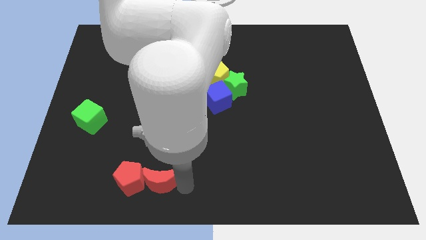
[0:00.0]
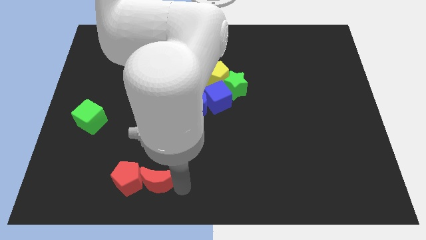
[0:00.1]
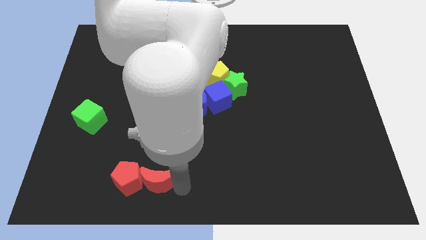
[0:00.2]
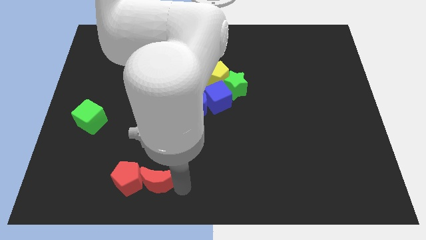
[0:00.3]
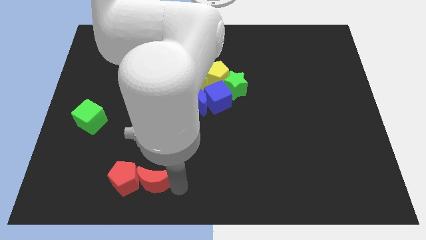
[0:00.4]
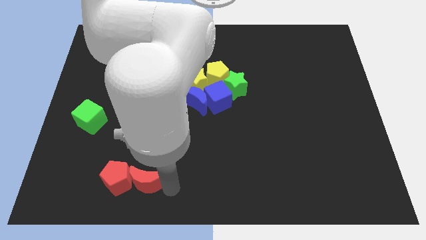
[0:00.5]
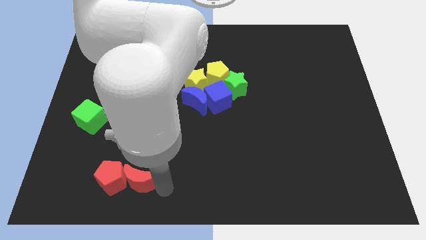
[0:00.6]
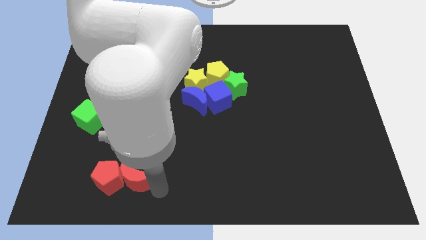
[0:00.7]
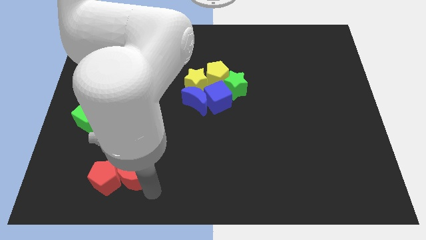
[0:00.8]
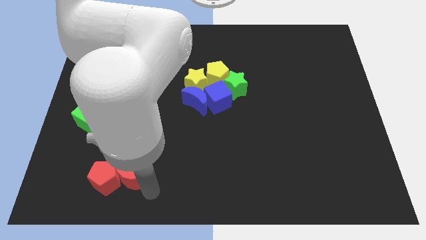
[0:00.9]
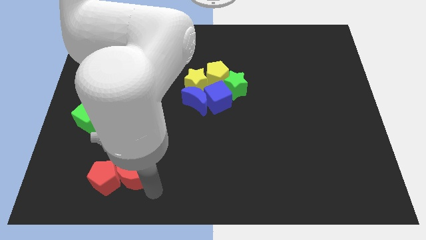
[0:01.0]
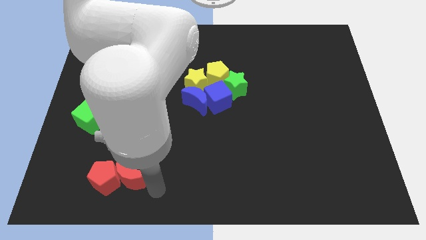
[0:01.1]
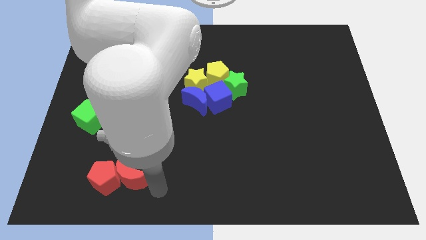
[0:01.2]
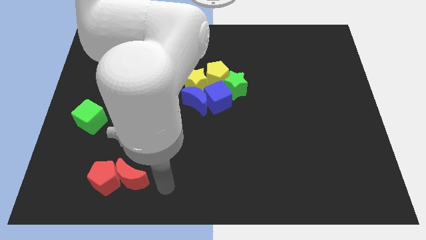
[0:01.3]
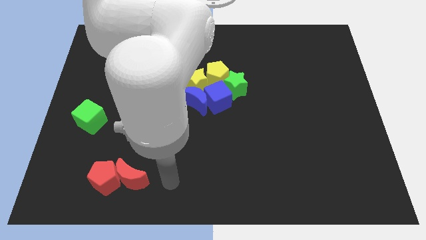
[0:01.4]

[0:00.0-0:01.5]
push the red crescent into the red pentagon

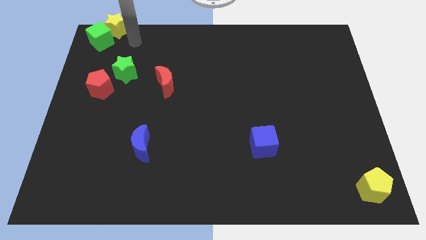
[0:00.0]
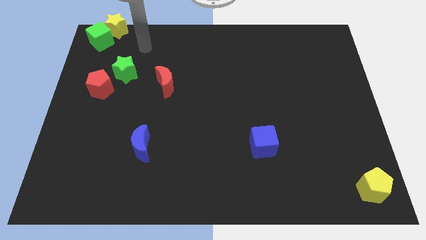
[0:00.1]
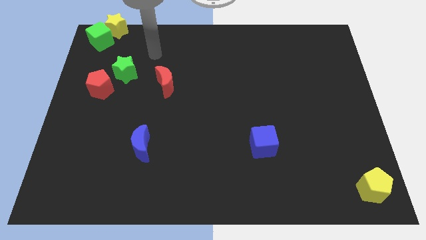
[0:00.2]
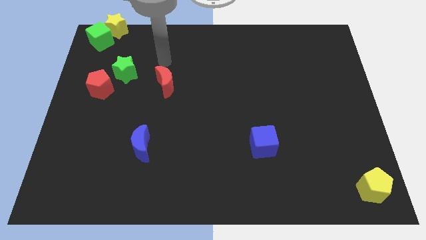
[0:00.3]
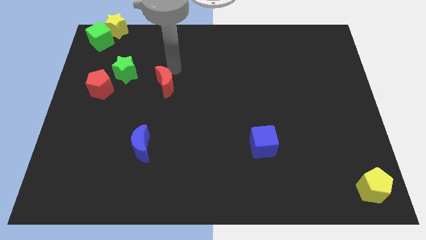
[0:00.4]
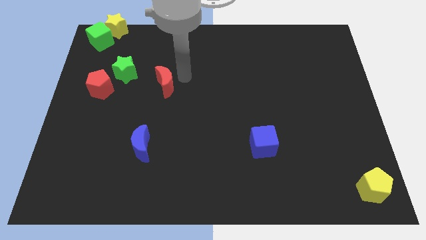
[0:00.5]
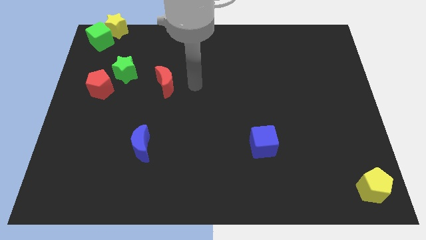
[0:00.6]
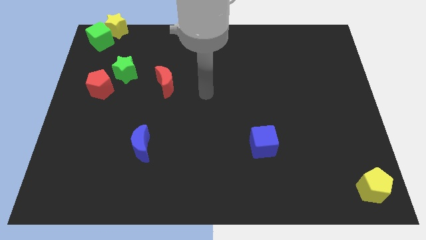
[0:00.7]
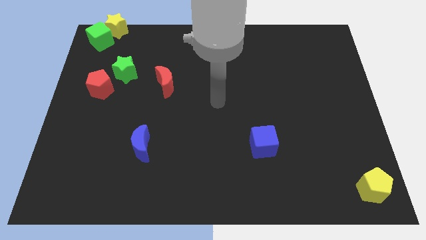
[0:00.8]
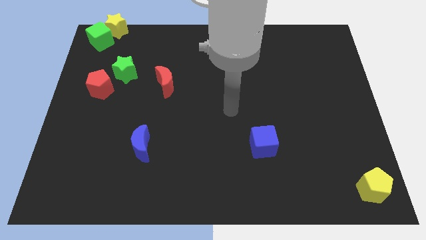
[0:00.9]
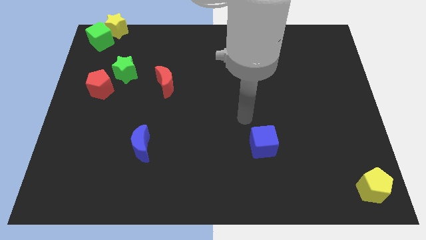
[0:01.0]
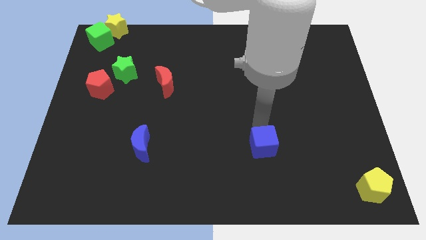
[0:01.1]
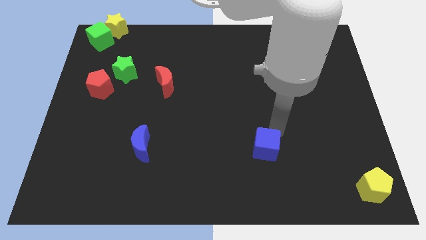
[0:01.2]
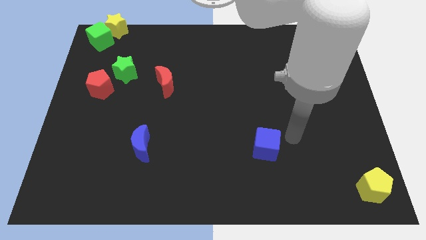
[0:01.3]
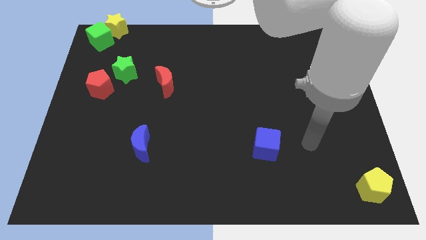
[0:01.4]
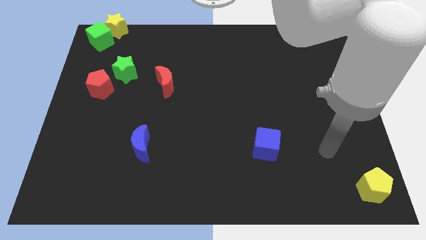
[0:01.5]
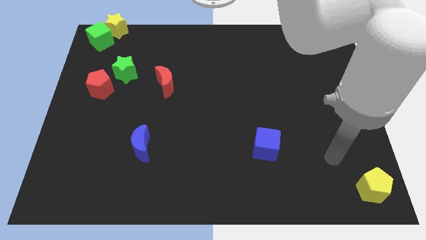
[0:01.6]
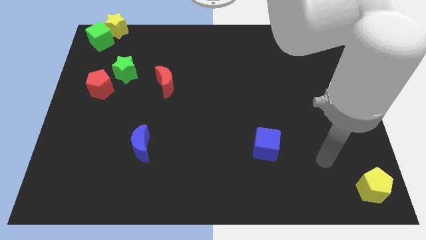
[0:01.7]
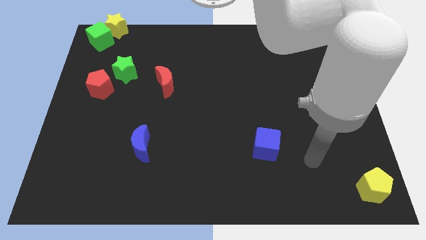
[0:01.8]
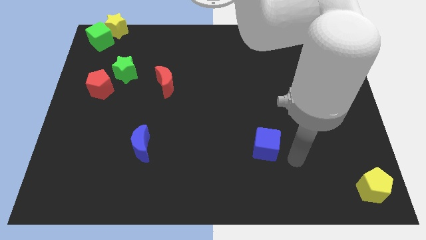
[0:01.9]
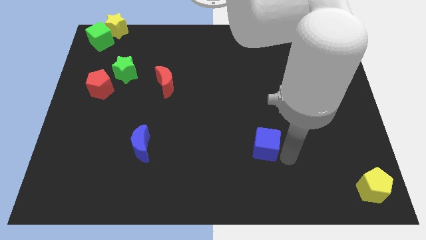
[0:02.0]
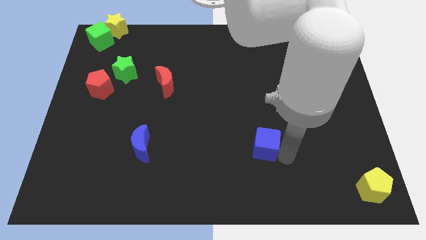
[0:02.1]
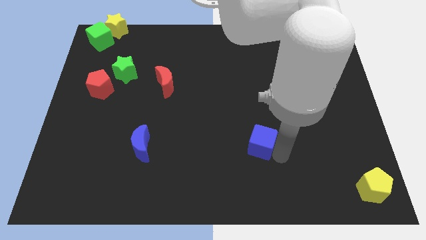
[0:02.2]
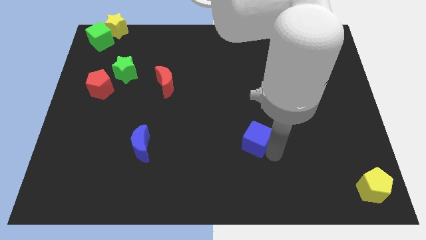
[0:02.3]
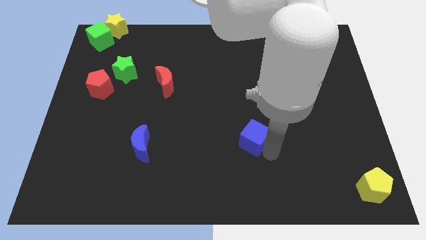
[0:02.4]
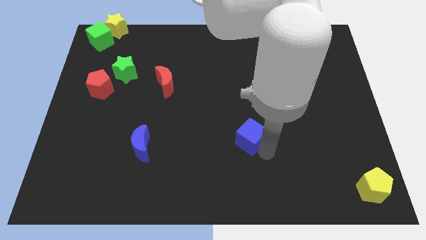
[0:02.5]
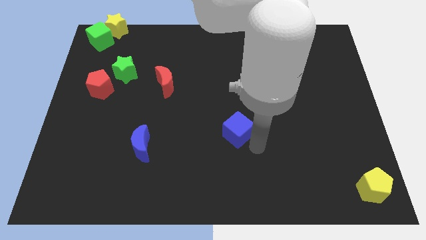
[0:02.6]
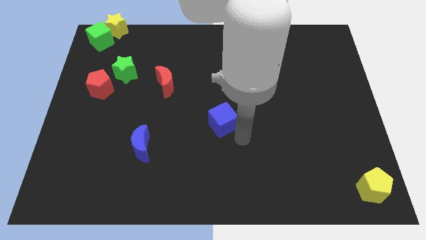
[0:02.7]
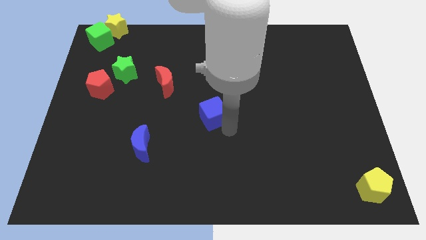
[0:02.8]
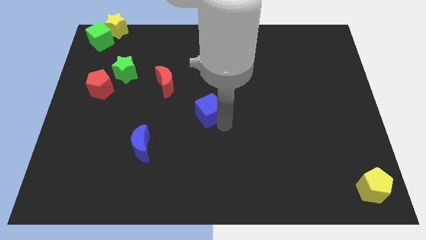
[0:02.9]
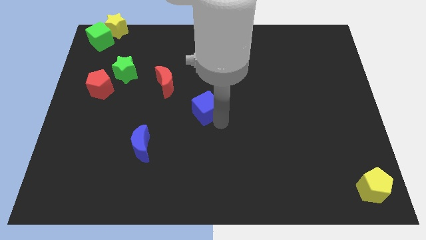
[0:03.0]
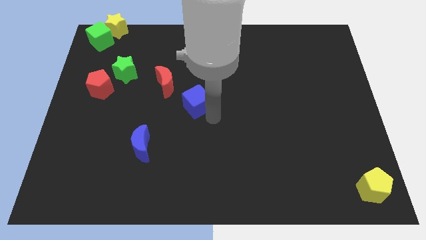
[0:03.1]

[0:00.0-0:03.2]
push the blue cube towards the center of the board

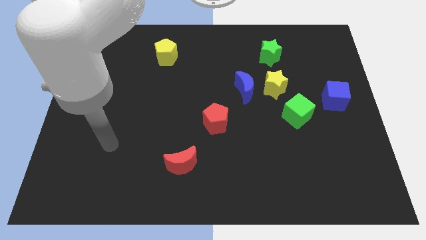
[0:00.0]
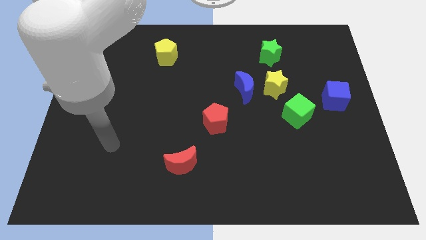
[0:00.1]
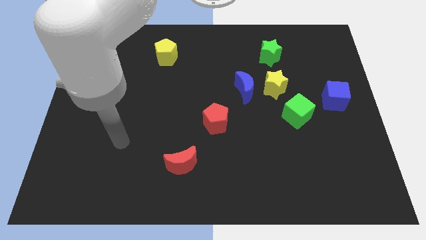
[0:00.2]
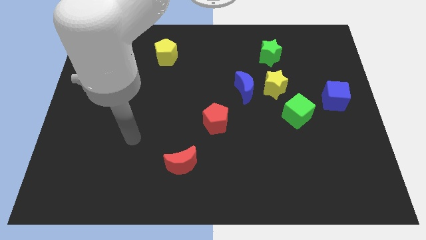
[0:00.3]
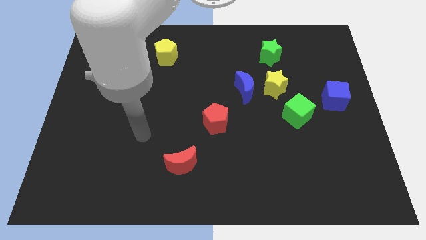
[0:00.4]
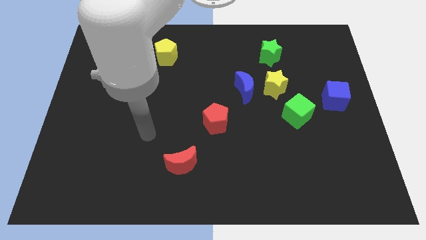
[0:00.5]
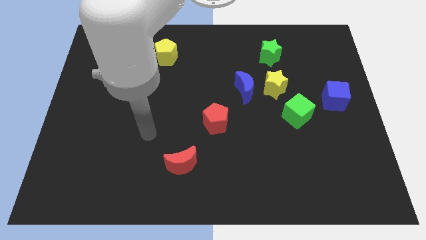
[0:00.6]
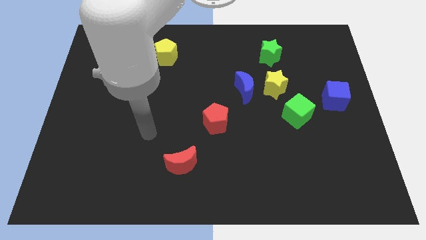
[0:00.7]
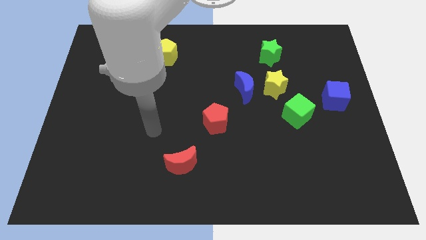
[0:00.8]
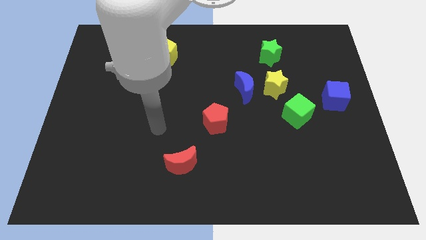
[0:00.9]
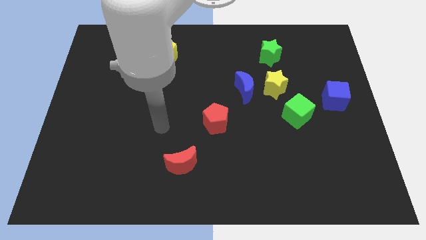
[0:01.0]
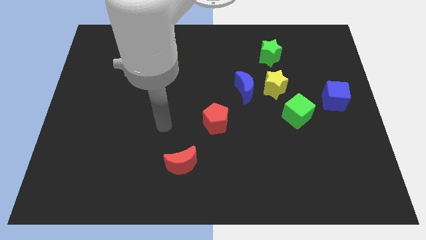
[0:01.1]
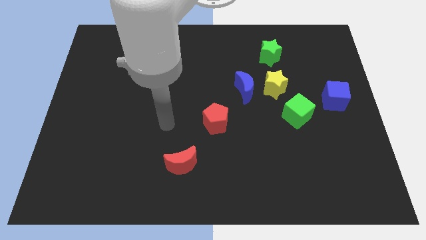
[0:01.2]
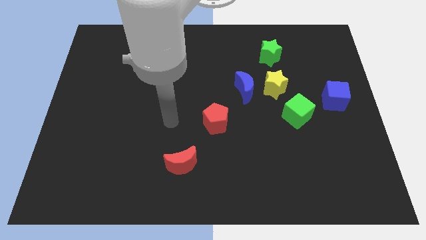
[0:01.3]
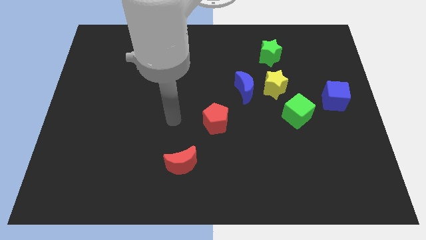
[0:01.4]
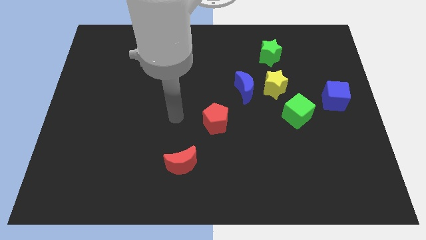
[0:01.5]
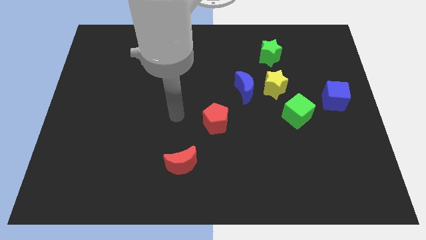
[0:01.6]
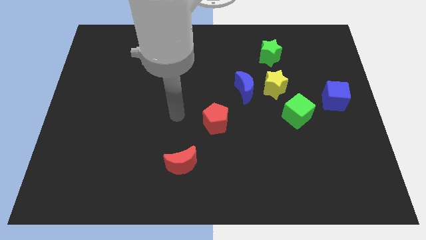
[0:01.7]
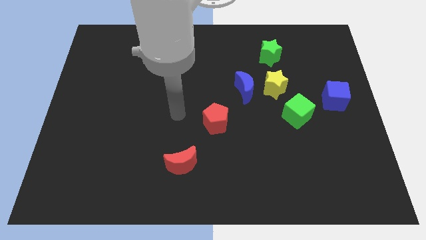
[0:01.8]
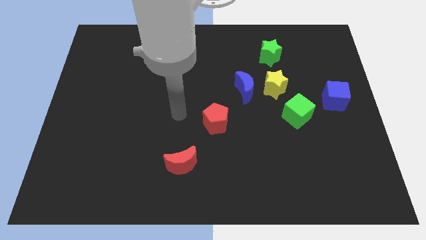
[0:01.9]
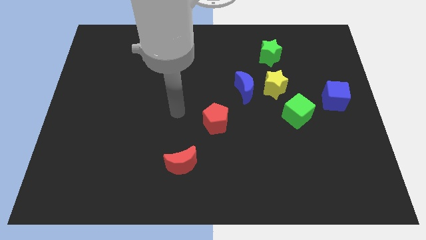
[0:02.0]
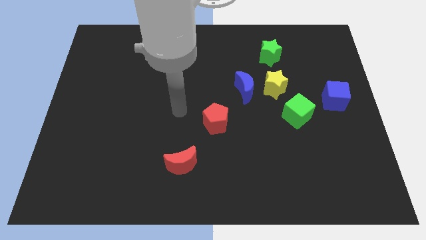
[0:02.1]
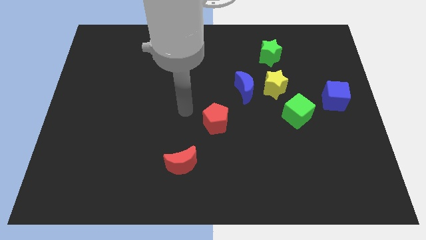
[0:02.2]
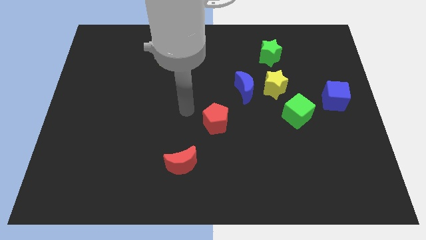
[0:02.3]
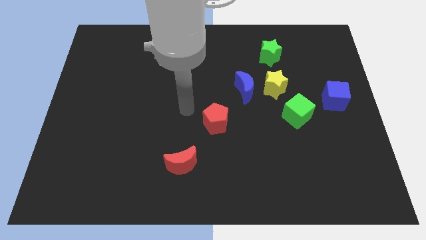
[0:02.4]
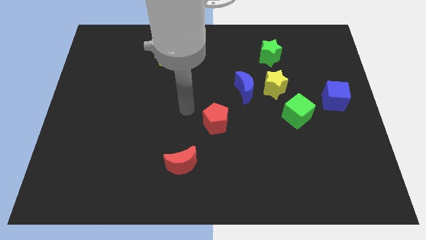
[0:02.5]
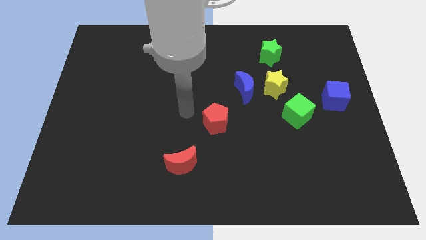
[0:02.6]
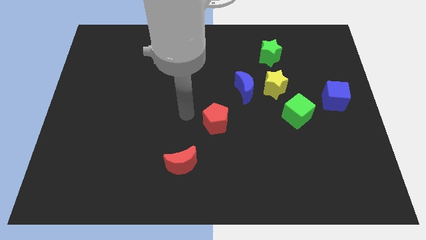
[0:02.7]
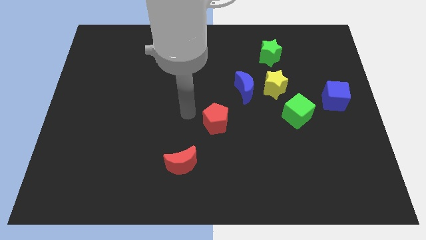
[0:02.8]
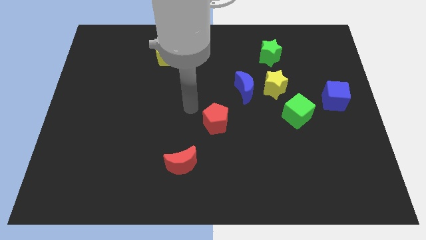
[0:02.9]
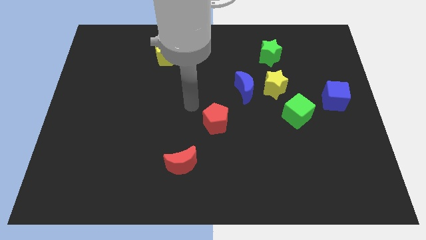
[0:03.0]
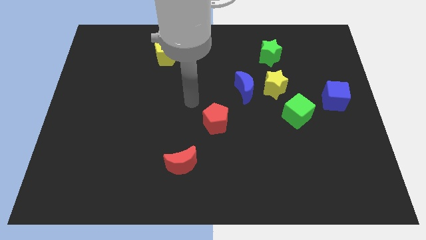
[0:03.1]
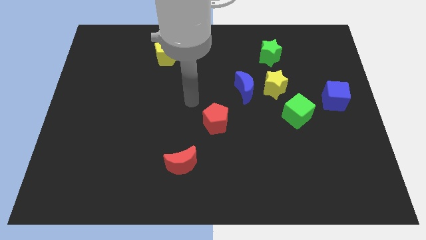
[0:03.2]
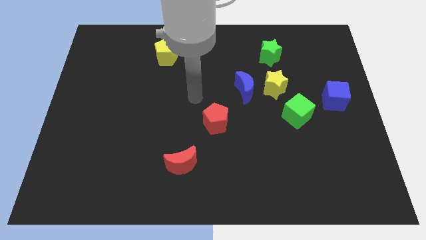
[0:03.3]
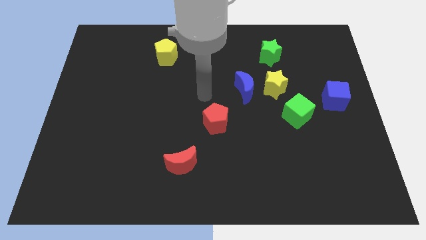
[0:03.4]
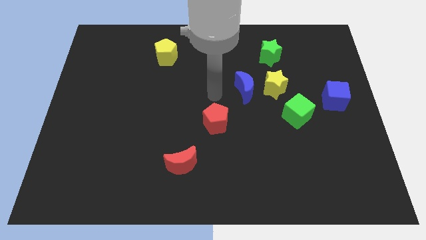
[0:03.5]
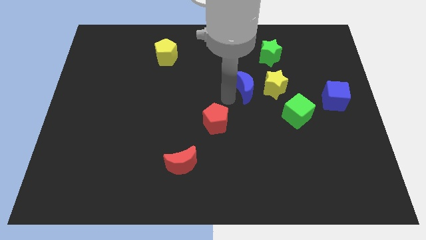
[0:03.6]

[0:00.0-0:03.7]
point your arm at the top side of the red pentagon

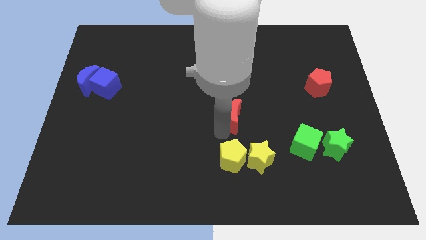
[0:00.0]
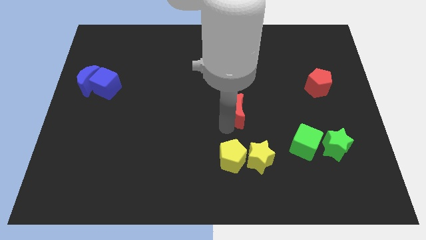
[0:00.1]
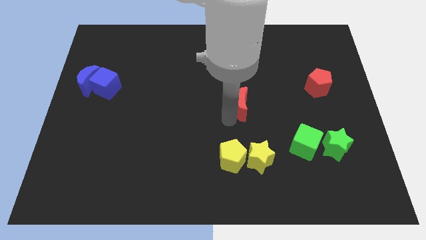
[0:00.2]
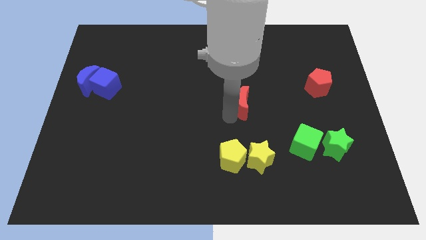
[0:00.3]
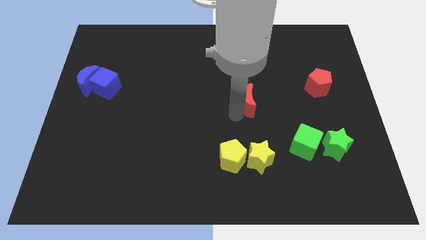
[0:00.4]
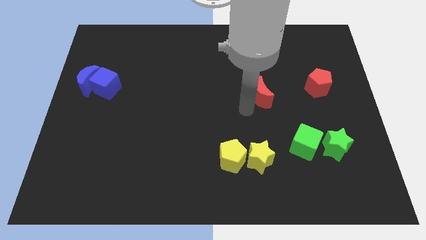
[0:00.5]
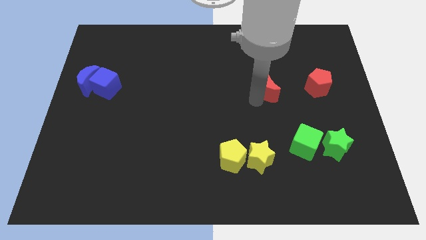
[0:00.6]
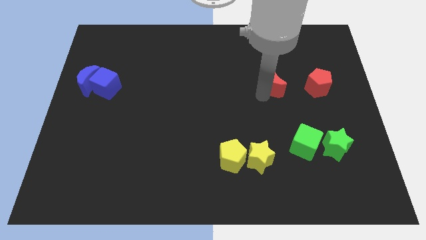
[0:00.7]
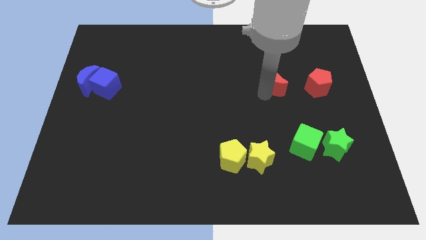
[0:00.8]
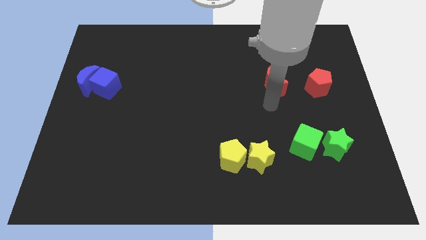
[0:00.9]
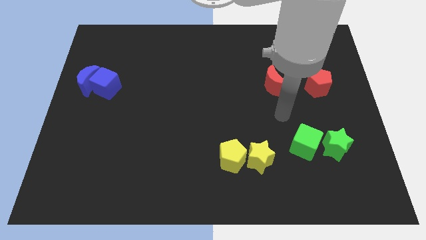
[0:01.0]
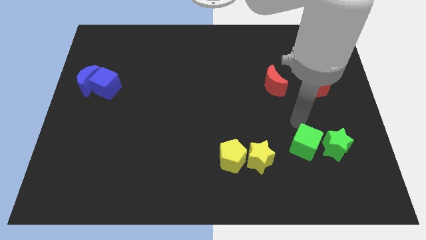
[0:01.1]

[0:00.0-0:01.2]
place the red moon to the left of the red pentagon
